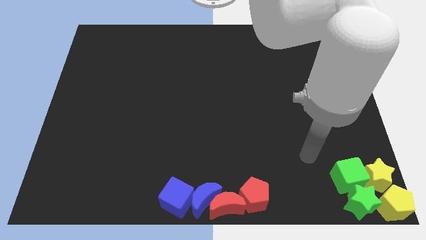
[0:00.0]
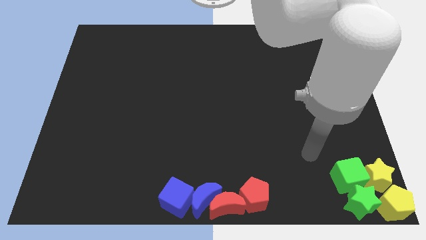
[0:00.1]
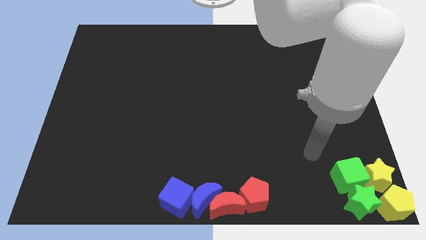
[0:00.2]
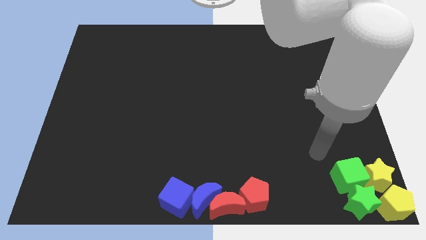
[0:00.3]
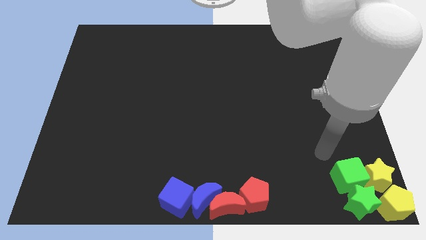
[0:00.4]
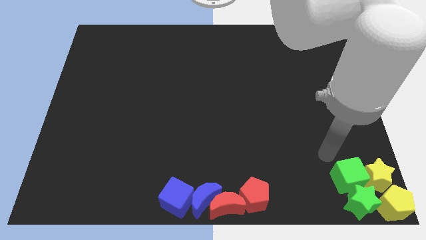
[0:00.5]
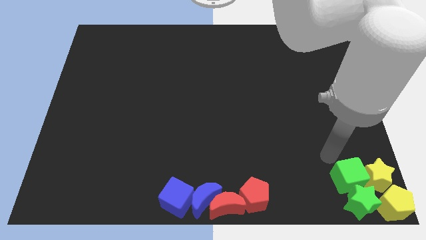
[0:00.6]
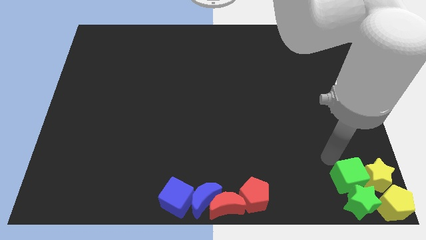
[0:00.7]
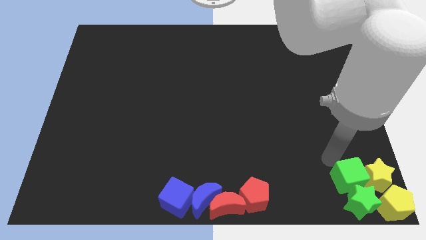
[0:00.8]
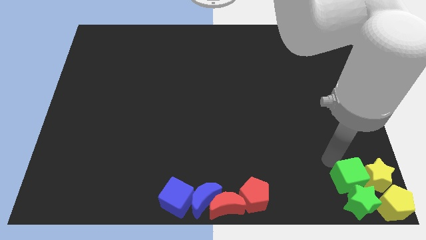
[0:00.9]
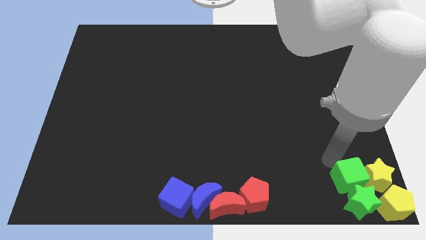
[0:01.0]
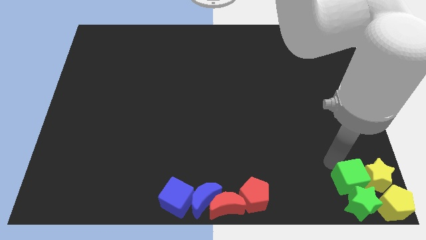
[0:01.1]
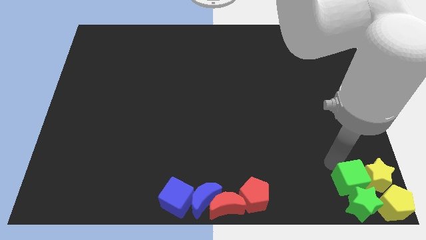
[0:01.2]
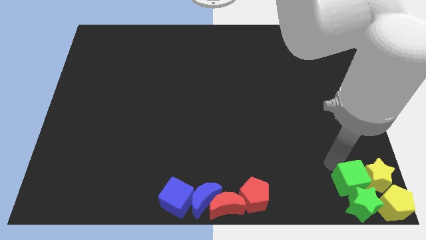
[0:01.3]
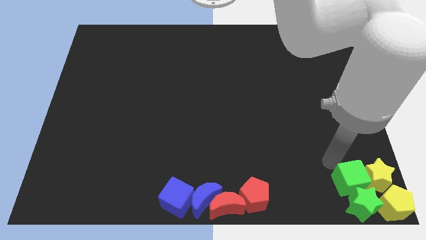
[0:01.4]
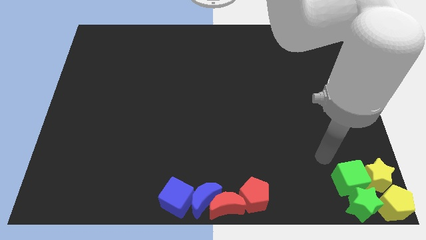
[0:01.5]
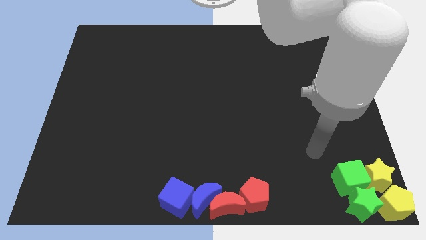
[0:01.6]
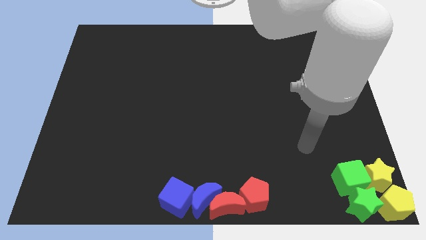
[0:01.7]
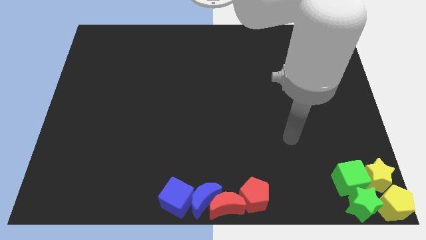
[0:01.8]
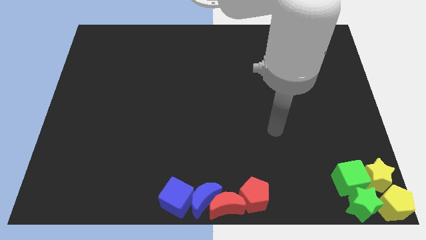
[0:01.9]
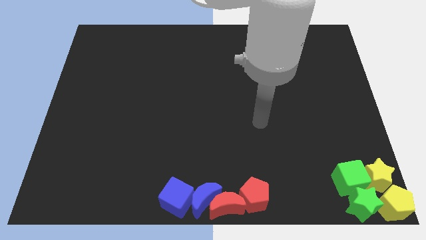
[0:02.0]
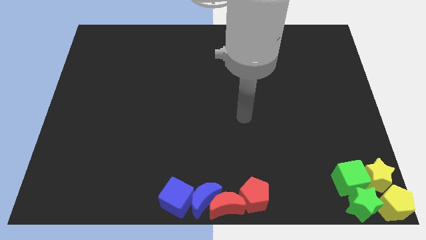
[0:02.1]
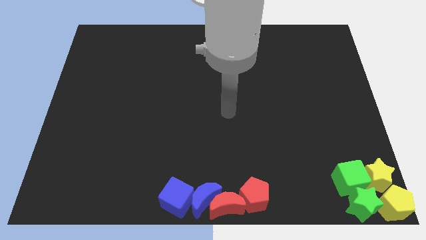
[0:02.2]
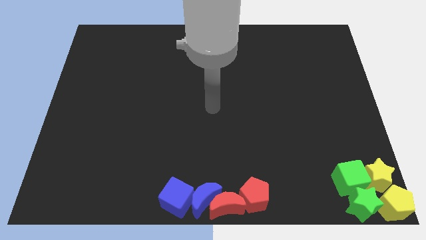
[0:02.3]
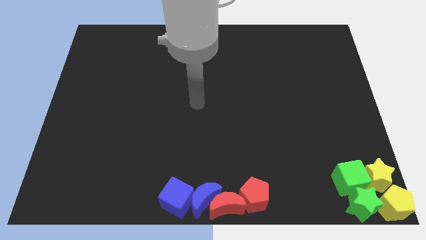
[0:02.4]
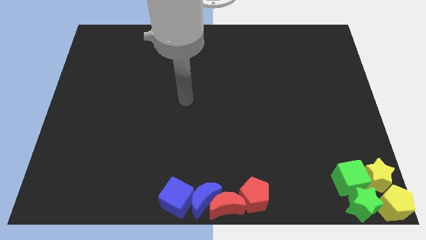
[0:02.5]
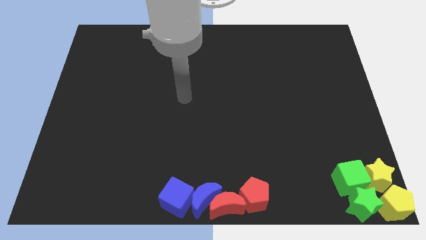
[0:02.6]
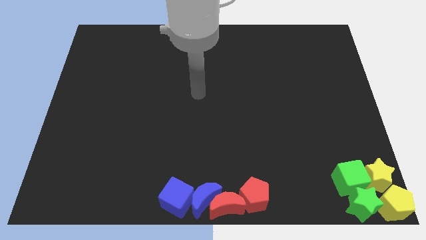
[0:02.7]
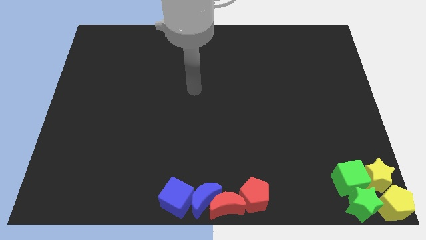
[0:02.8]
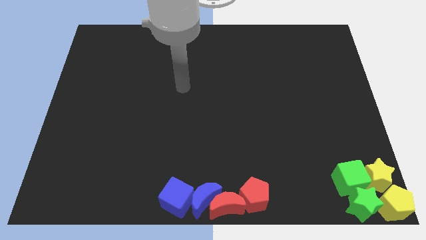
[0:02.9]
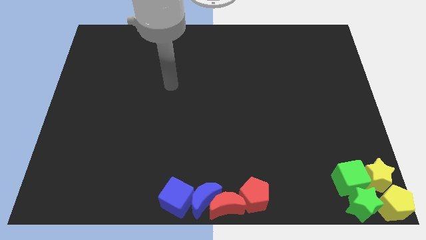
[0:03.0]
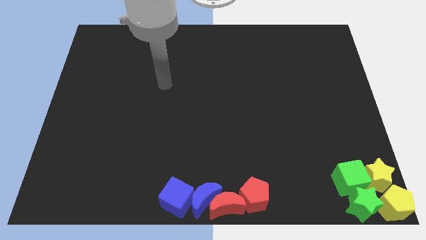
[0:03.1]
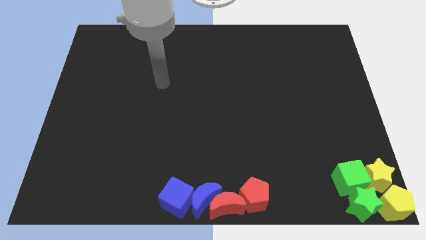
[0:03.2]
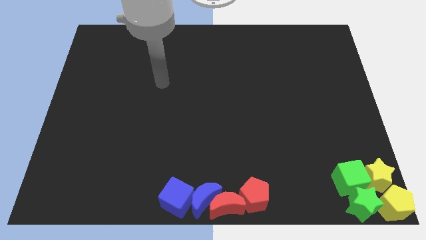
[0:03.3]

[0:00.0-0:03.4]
move arm towards the center of the board

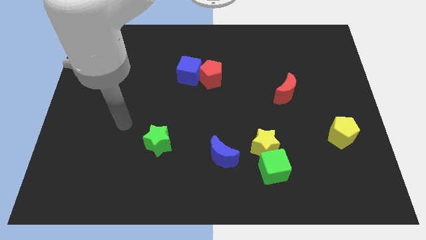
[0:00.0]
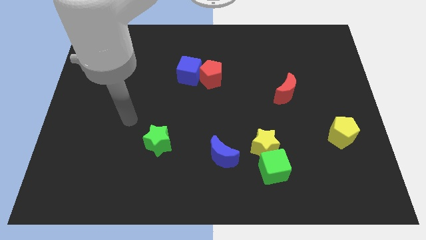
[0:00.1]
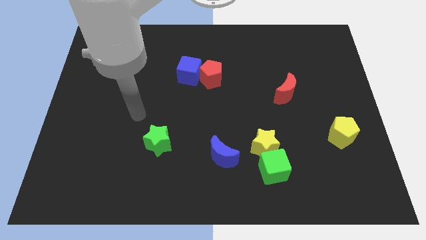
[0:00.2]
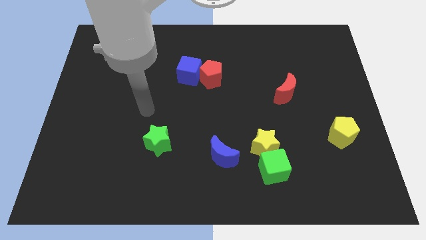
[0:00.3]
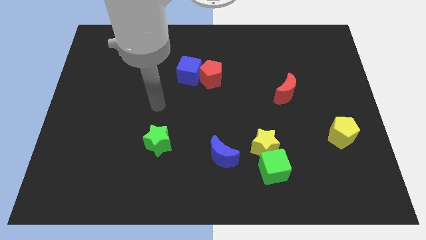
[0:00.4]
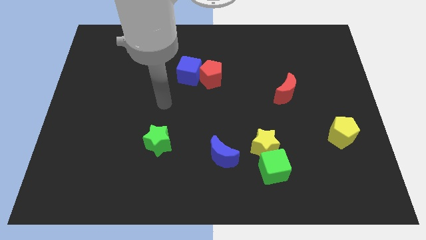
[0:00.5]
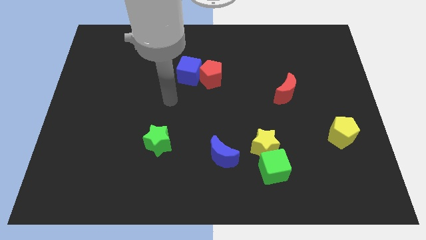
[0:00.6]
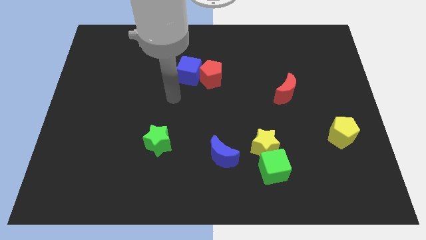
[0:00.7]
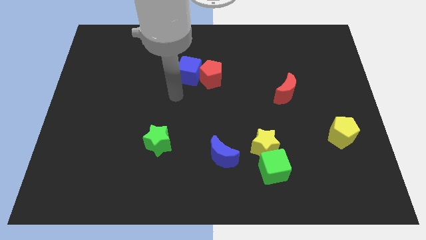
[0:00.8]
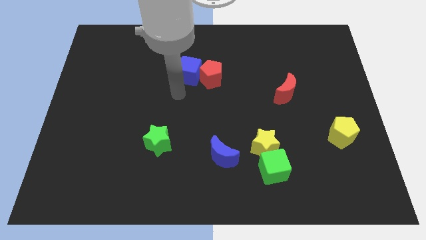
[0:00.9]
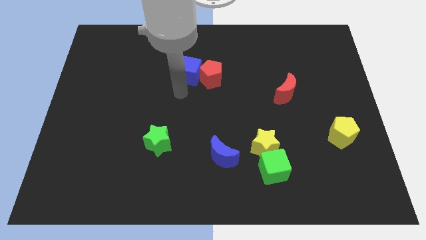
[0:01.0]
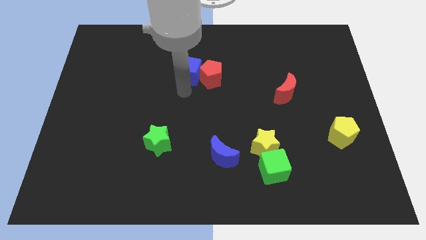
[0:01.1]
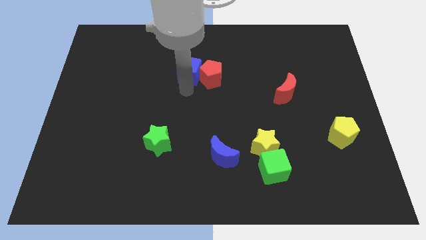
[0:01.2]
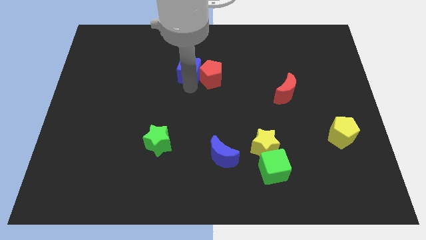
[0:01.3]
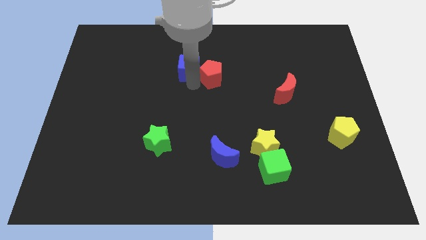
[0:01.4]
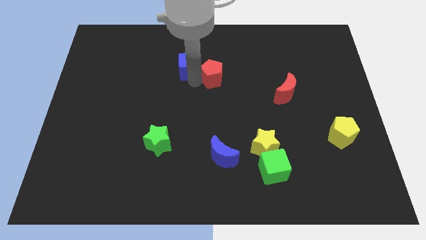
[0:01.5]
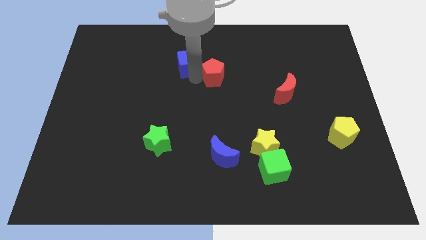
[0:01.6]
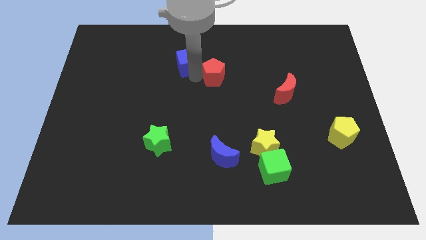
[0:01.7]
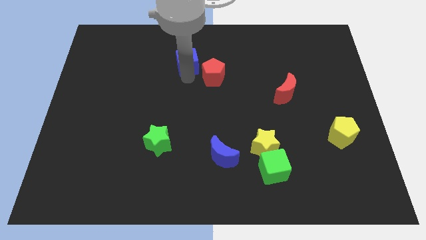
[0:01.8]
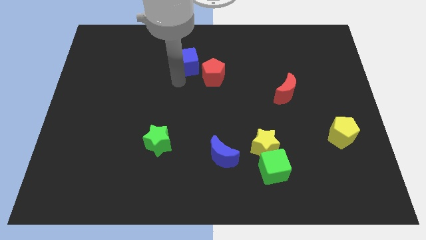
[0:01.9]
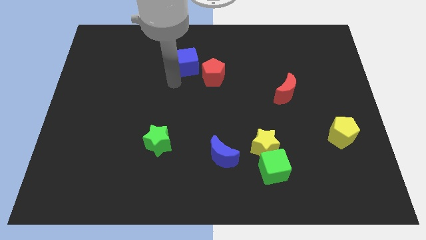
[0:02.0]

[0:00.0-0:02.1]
move your arm to the blue cube

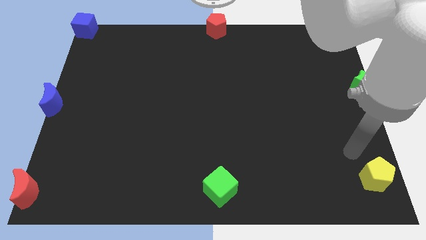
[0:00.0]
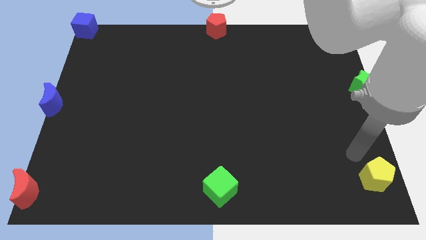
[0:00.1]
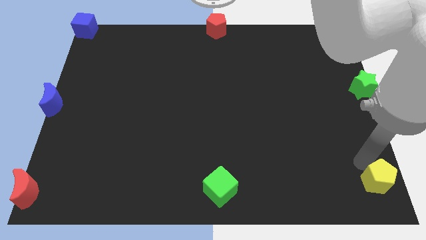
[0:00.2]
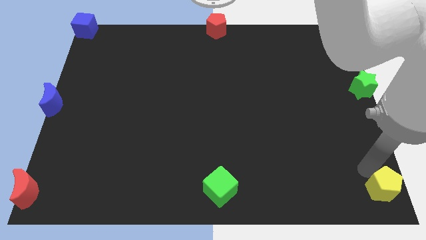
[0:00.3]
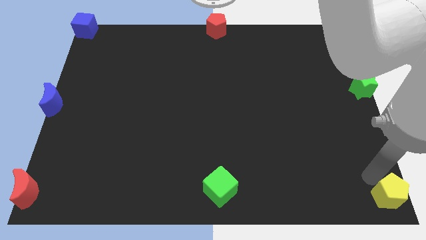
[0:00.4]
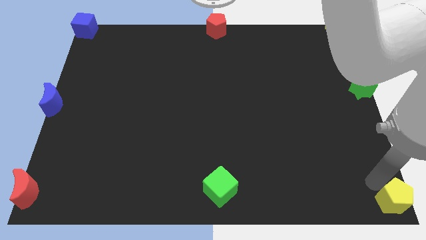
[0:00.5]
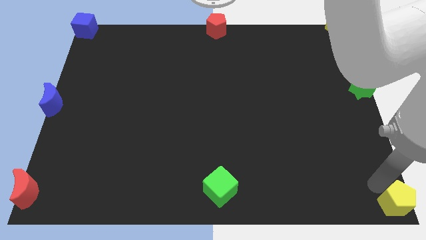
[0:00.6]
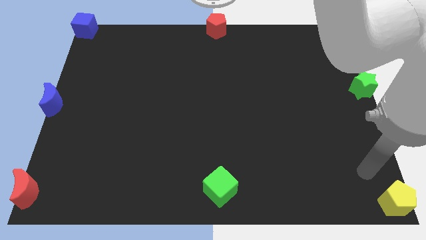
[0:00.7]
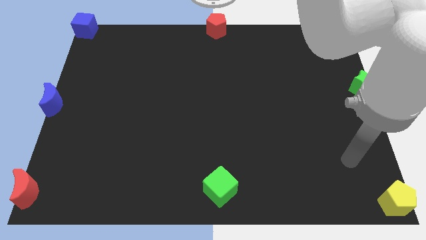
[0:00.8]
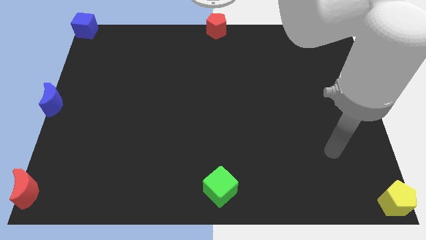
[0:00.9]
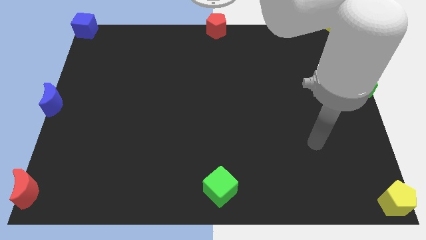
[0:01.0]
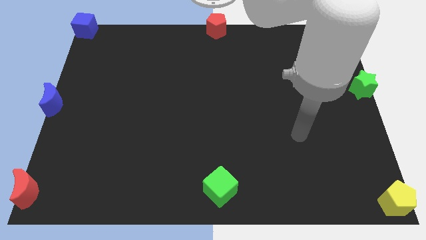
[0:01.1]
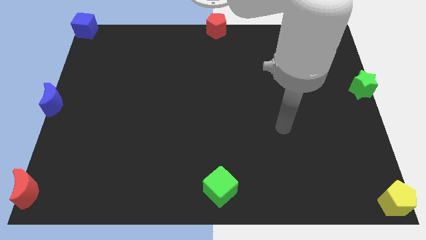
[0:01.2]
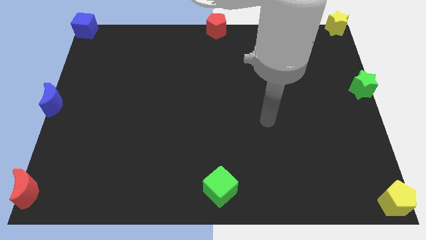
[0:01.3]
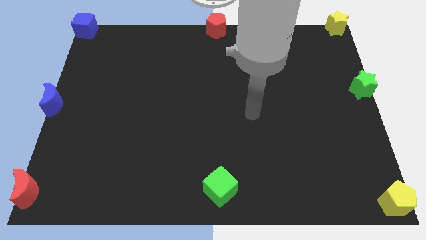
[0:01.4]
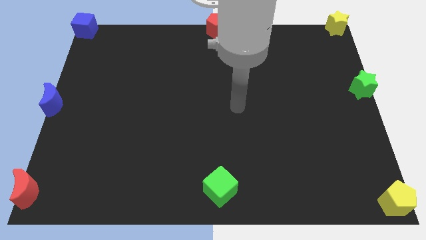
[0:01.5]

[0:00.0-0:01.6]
place the yellow pentagon to the bottom right corner

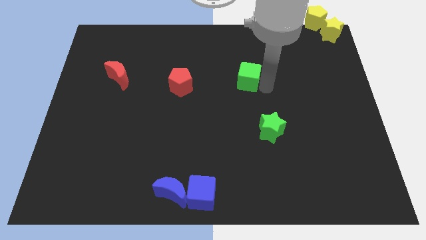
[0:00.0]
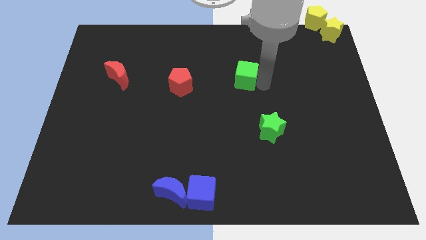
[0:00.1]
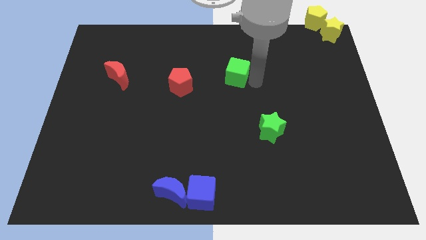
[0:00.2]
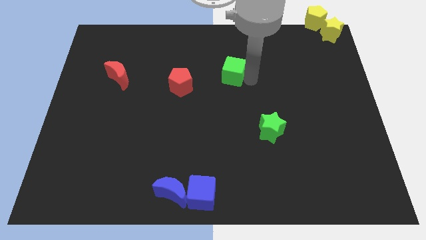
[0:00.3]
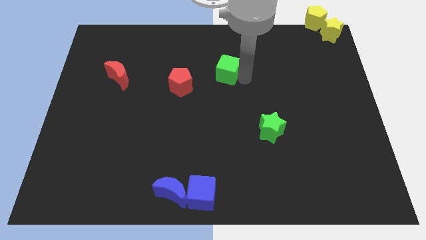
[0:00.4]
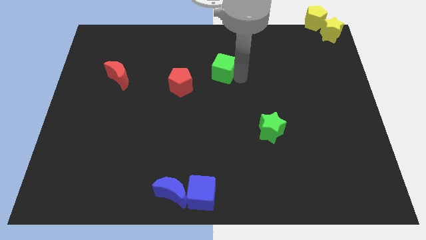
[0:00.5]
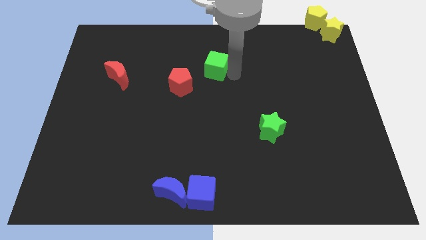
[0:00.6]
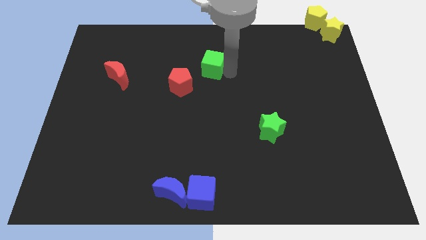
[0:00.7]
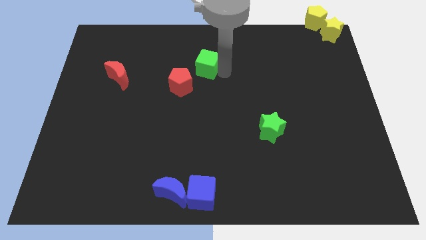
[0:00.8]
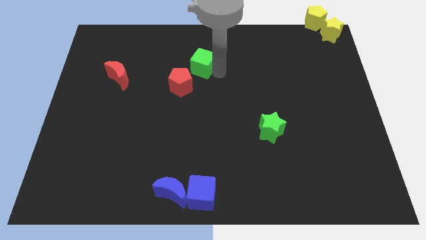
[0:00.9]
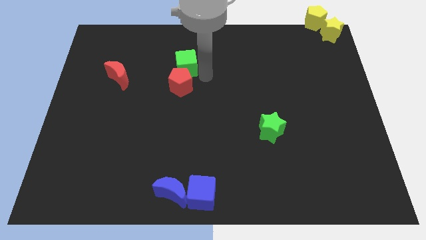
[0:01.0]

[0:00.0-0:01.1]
place green cube on top of red pentagon

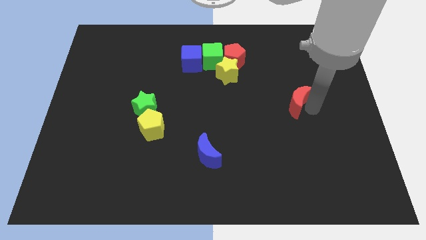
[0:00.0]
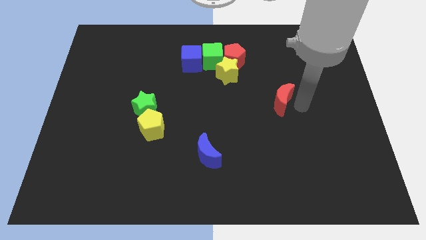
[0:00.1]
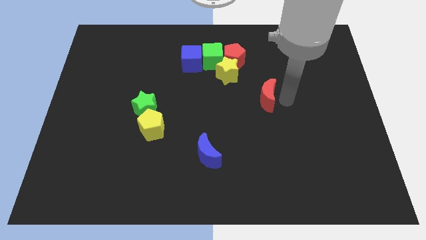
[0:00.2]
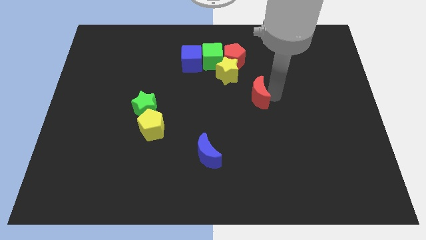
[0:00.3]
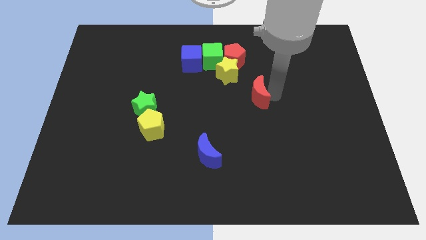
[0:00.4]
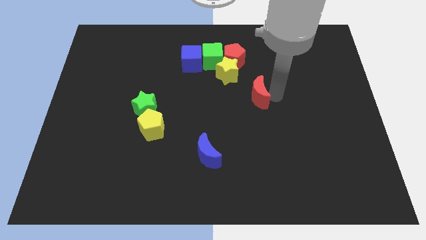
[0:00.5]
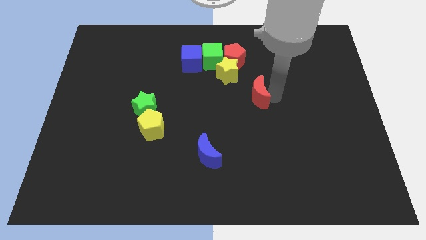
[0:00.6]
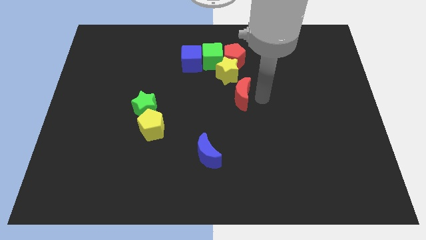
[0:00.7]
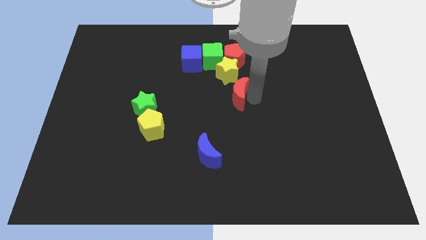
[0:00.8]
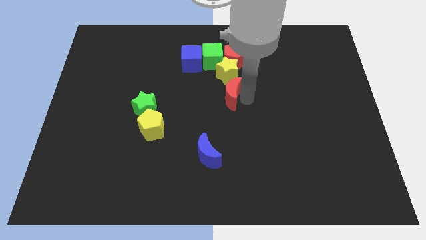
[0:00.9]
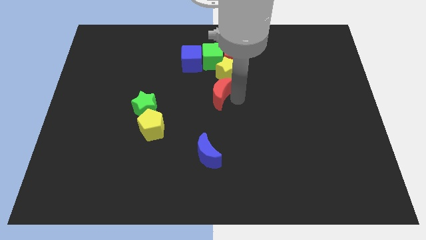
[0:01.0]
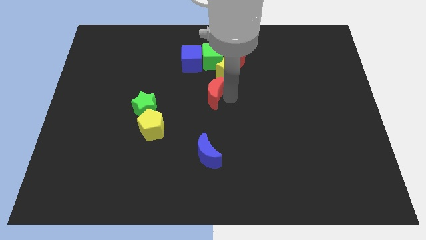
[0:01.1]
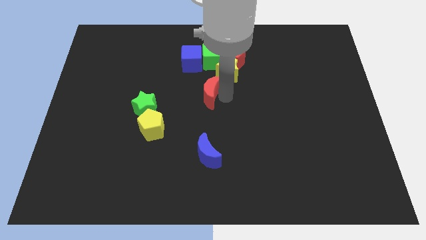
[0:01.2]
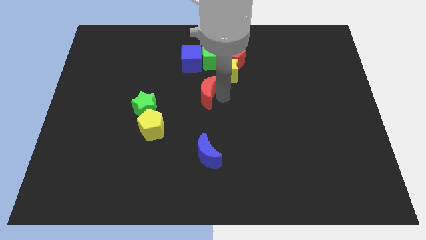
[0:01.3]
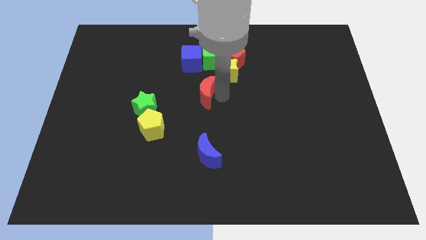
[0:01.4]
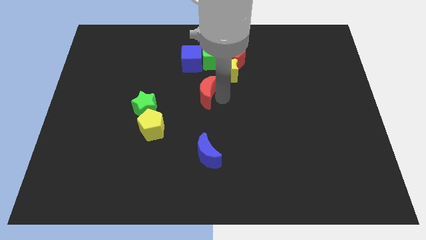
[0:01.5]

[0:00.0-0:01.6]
place red crescent to the bottom left of the yellow star
